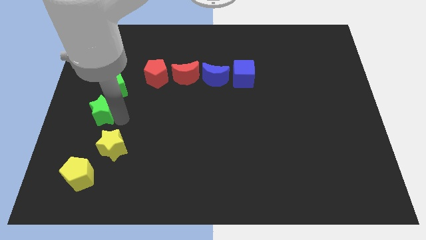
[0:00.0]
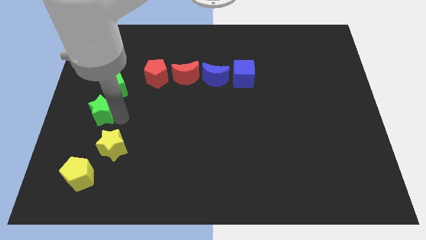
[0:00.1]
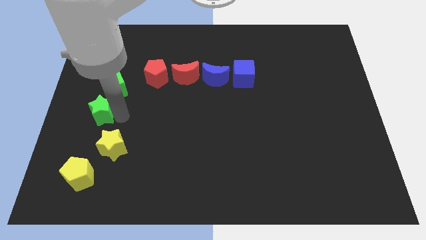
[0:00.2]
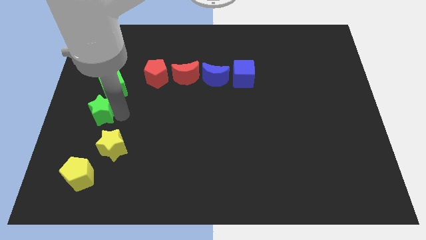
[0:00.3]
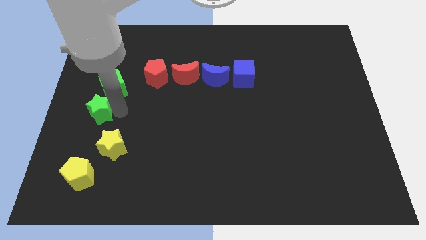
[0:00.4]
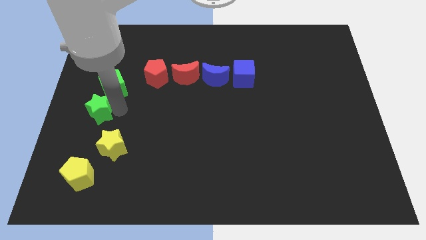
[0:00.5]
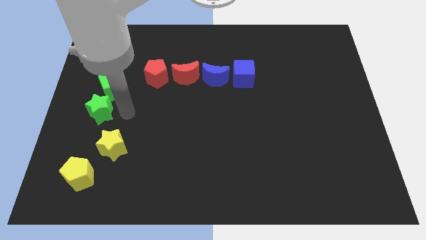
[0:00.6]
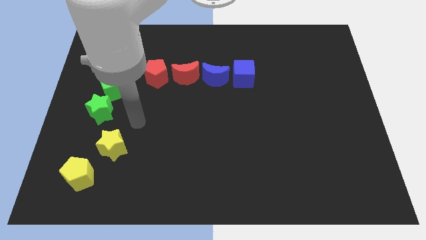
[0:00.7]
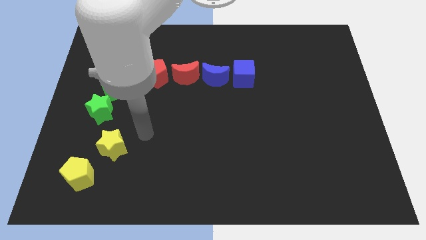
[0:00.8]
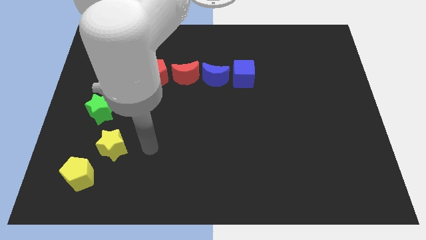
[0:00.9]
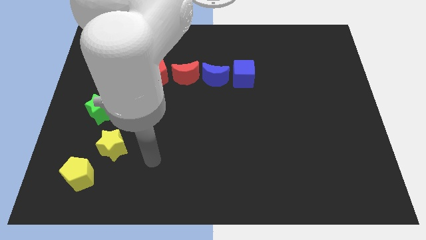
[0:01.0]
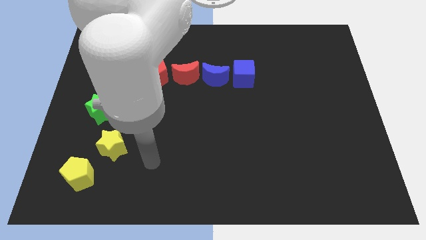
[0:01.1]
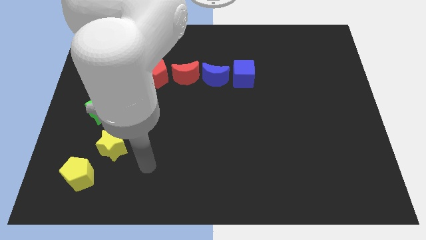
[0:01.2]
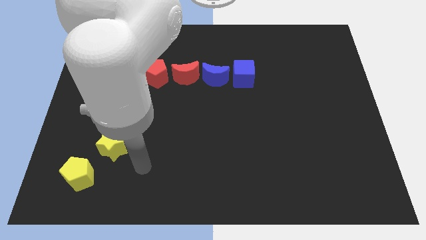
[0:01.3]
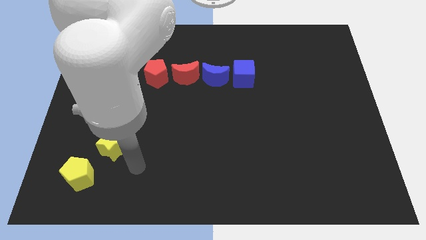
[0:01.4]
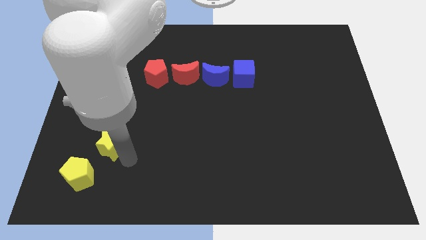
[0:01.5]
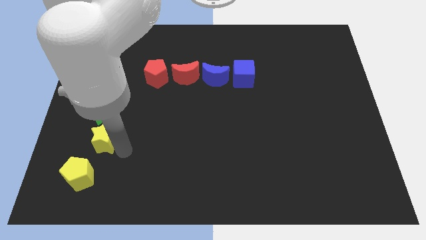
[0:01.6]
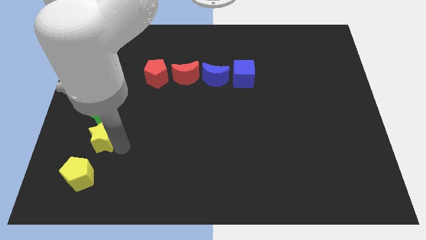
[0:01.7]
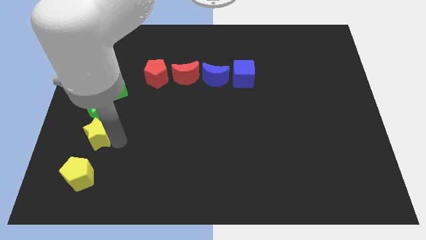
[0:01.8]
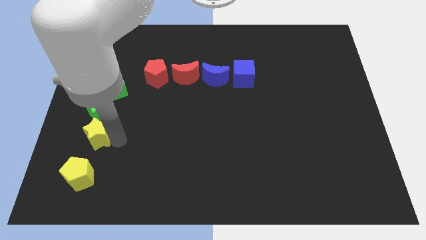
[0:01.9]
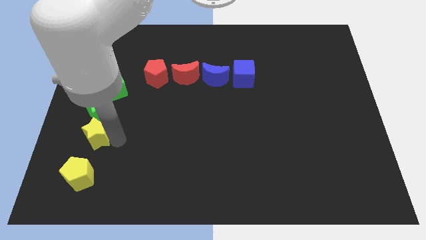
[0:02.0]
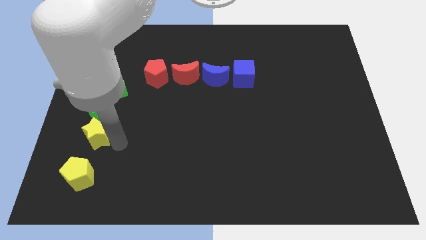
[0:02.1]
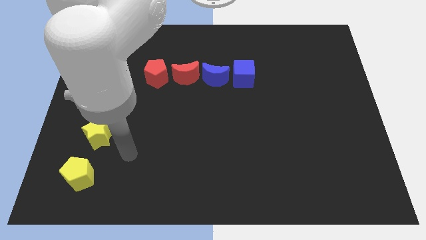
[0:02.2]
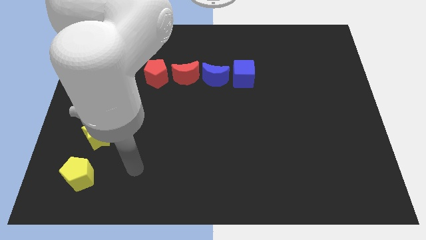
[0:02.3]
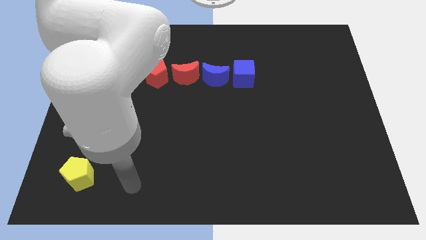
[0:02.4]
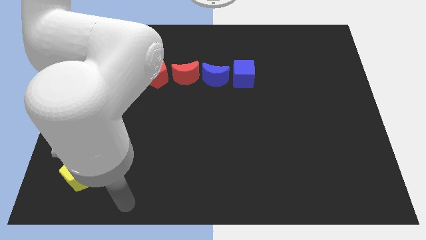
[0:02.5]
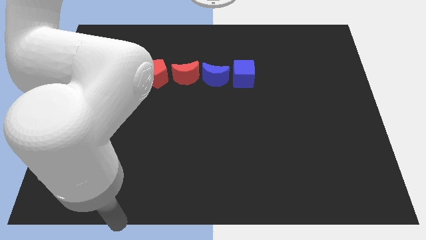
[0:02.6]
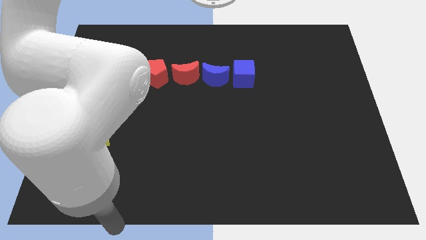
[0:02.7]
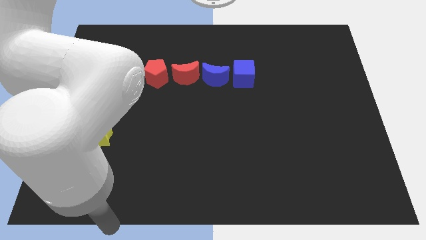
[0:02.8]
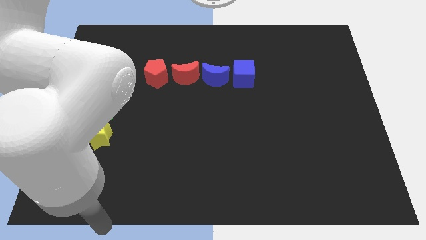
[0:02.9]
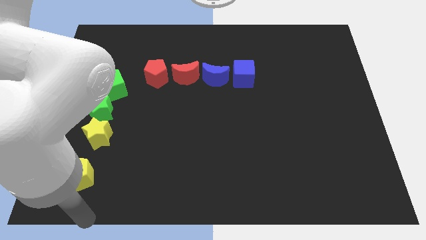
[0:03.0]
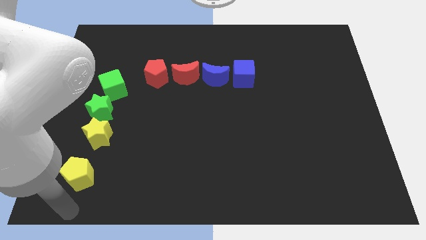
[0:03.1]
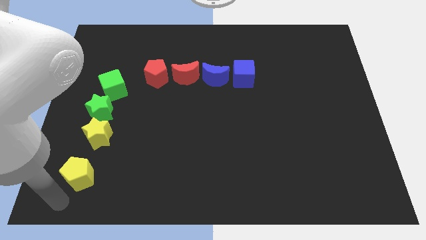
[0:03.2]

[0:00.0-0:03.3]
move the arm to the yellow pentagon

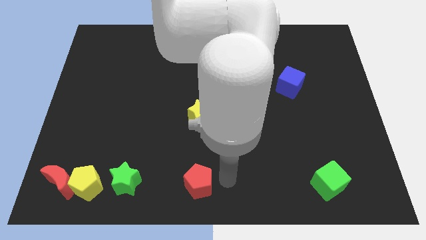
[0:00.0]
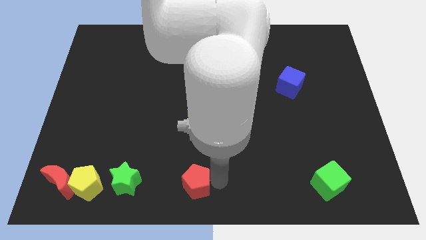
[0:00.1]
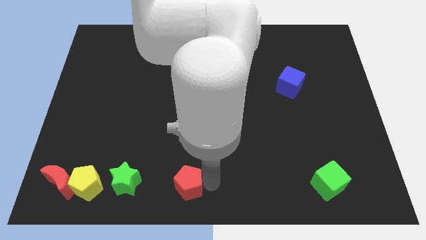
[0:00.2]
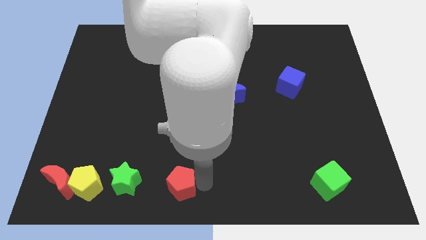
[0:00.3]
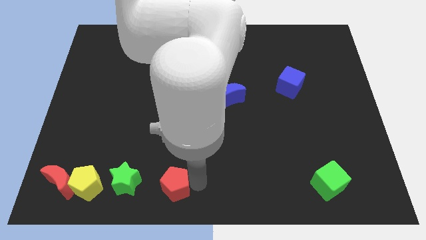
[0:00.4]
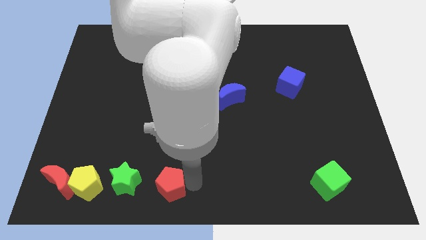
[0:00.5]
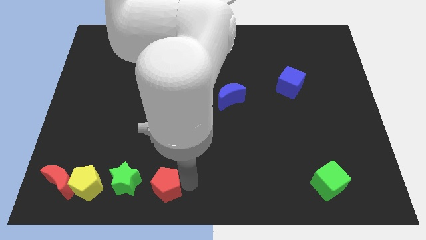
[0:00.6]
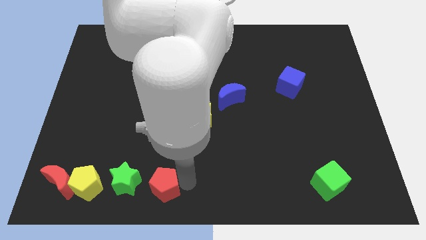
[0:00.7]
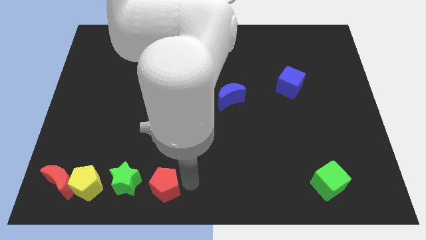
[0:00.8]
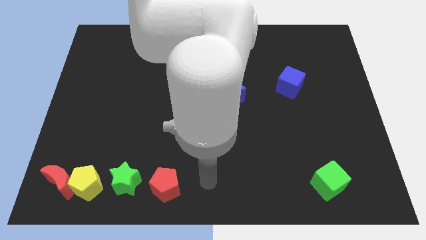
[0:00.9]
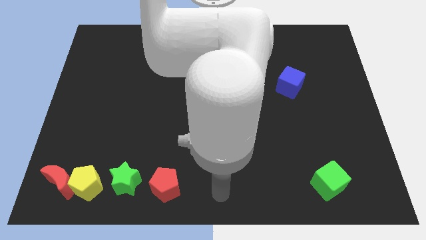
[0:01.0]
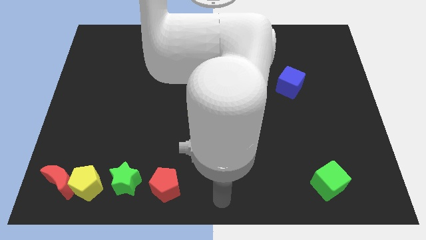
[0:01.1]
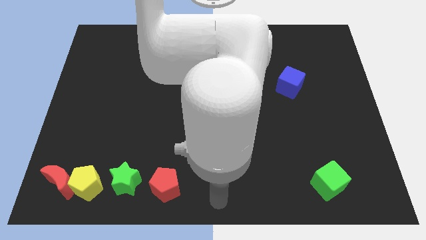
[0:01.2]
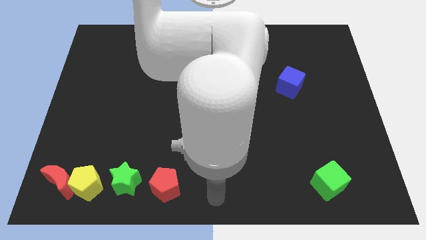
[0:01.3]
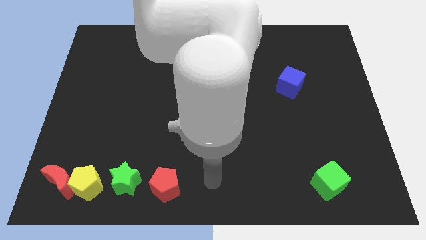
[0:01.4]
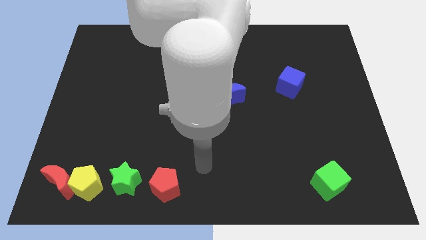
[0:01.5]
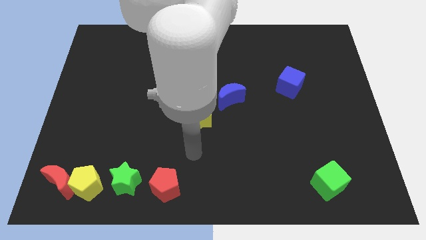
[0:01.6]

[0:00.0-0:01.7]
push the red pentagon to the right of the green star

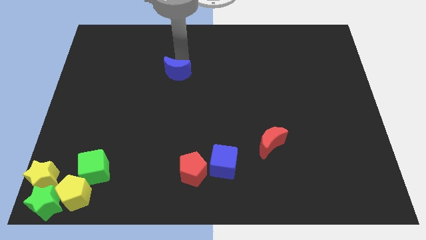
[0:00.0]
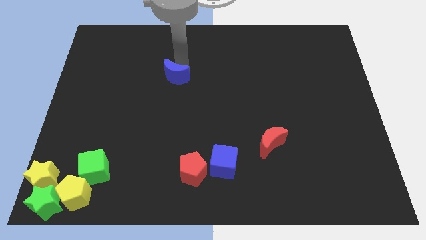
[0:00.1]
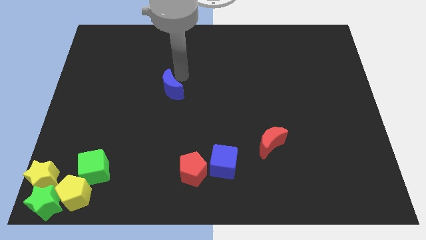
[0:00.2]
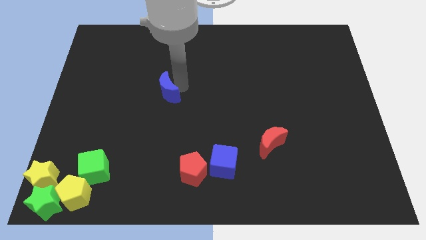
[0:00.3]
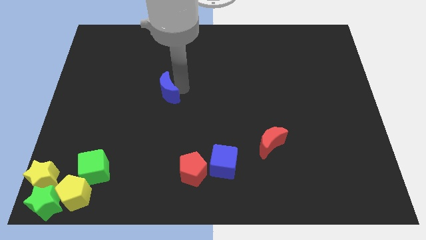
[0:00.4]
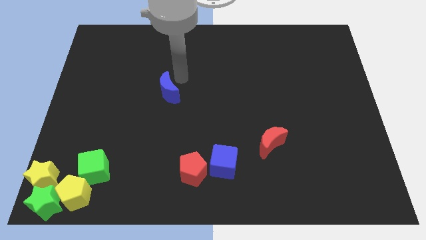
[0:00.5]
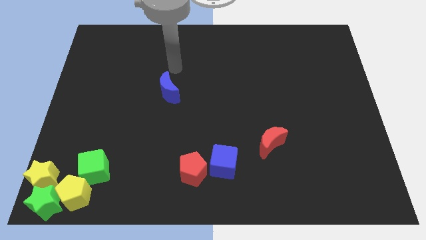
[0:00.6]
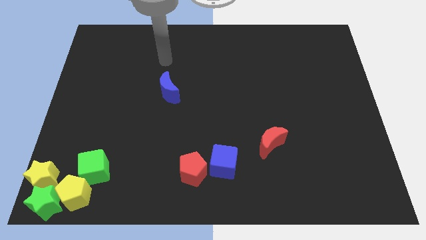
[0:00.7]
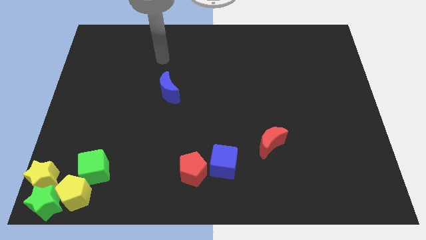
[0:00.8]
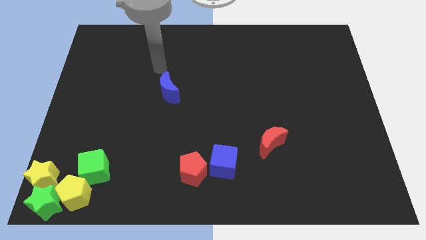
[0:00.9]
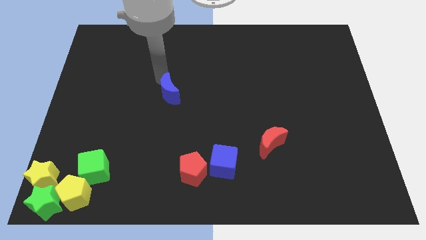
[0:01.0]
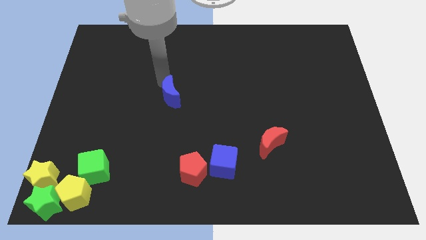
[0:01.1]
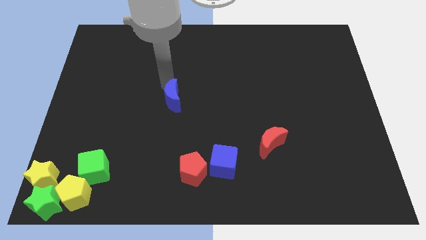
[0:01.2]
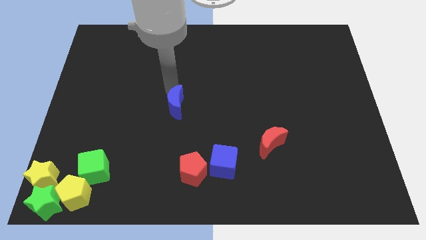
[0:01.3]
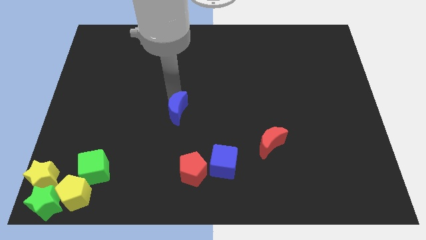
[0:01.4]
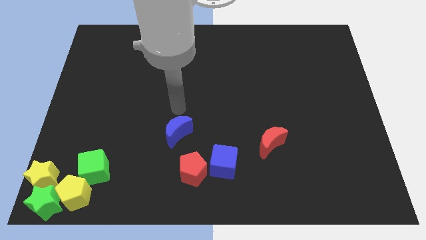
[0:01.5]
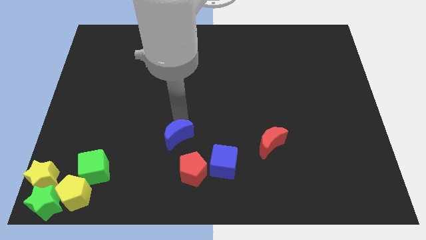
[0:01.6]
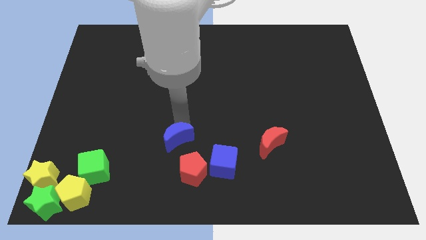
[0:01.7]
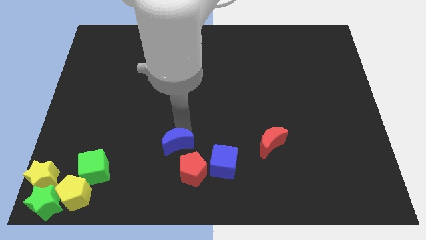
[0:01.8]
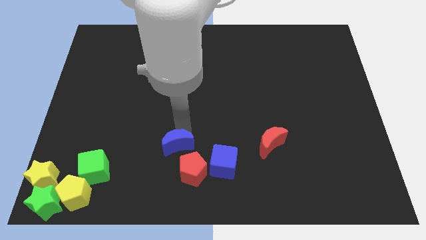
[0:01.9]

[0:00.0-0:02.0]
drag blue moon towards red pentagon

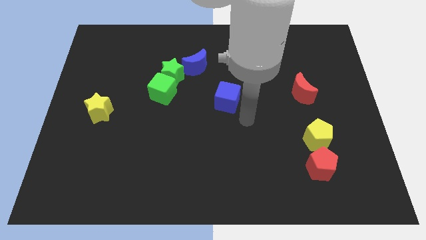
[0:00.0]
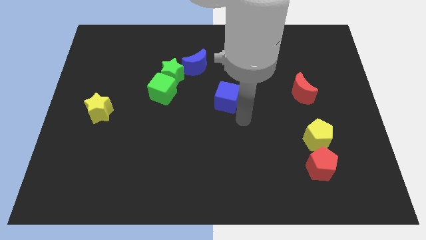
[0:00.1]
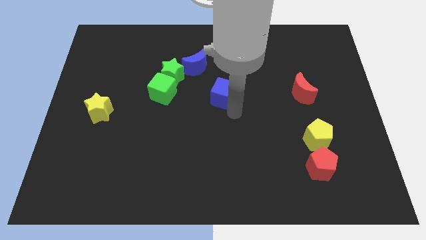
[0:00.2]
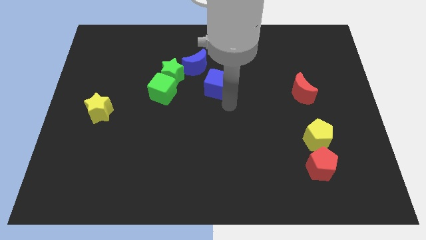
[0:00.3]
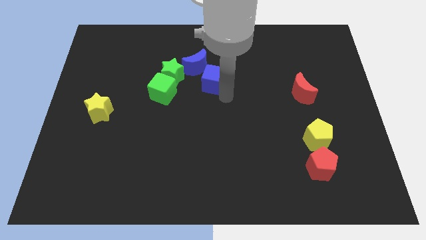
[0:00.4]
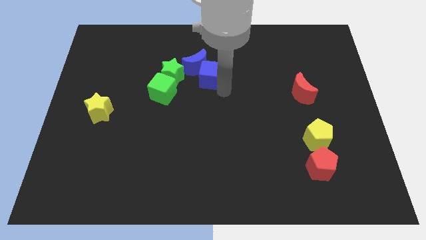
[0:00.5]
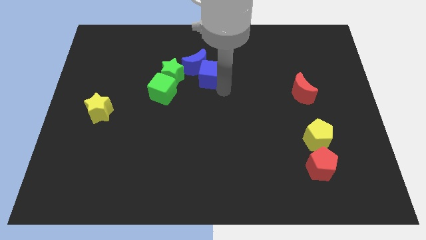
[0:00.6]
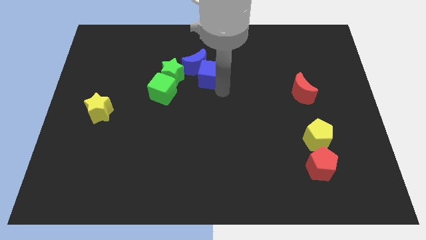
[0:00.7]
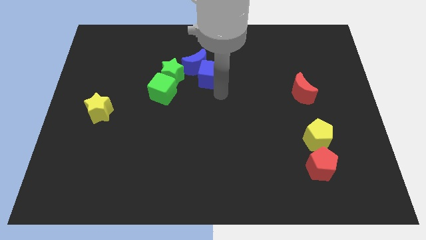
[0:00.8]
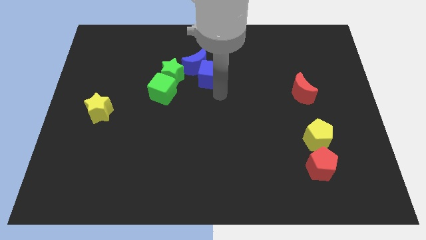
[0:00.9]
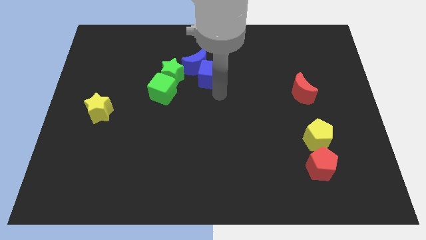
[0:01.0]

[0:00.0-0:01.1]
push the blue cube towards the blue moon

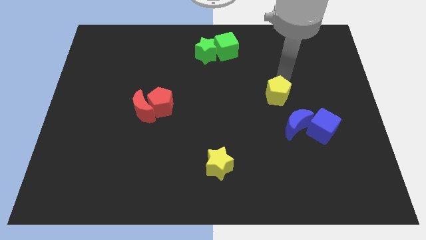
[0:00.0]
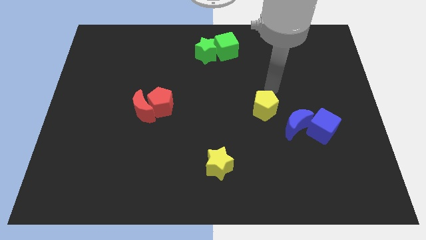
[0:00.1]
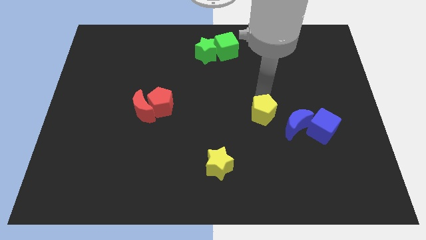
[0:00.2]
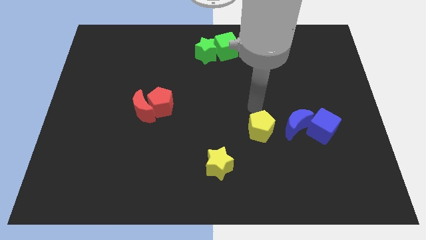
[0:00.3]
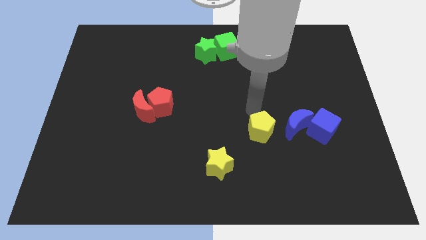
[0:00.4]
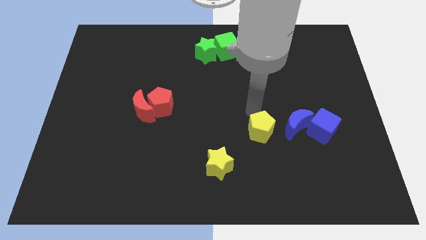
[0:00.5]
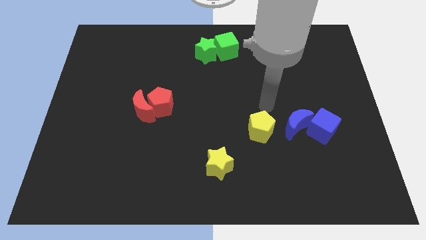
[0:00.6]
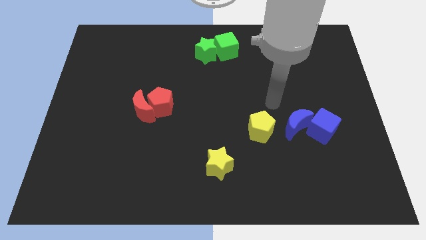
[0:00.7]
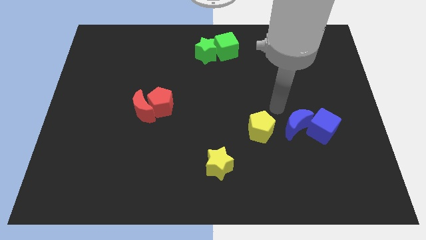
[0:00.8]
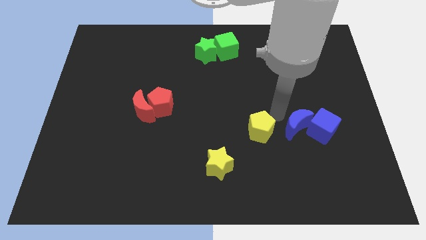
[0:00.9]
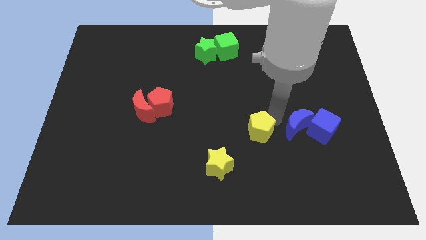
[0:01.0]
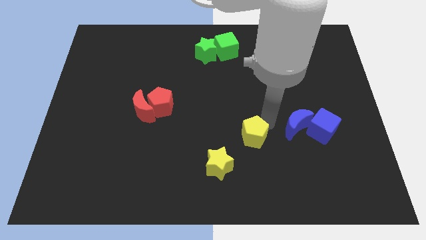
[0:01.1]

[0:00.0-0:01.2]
push the yellow pentagon to the left side of the blue moon
